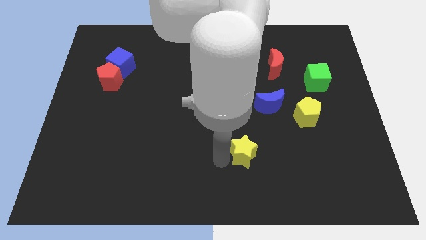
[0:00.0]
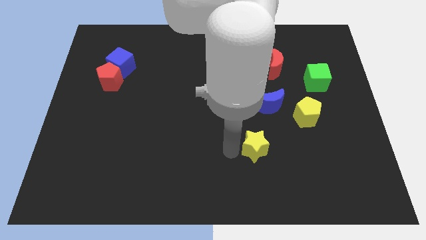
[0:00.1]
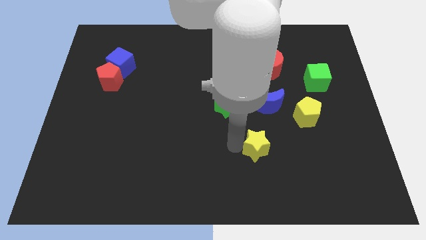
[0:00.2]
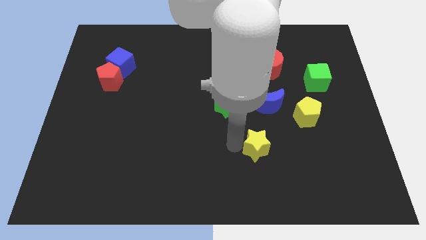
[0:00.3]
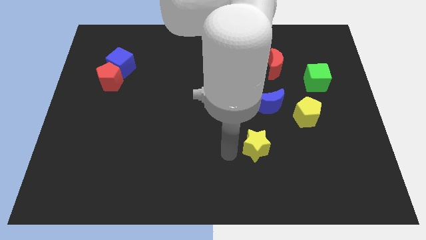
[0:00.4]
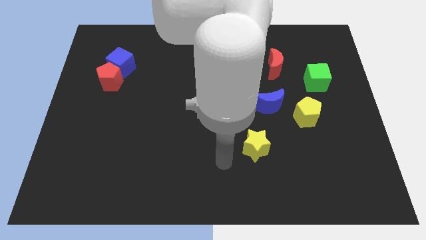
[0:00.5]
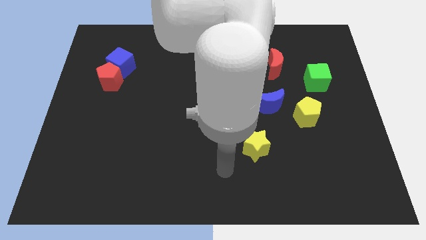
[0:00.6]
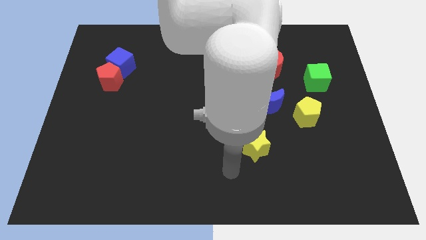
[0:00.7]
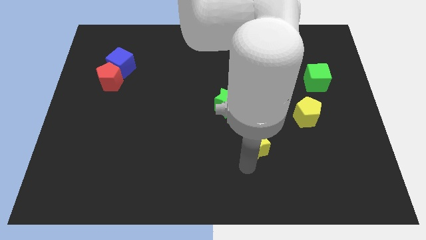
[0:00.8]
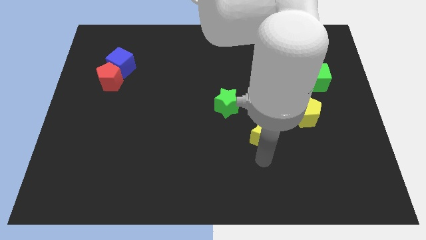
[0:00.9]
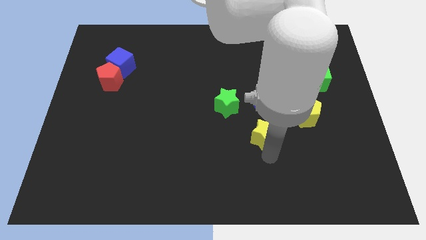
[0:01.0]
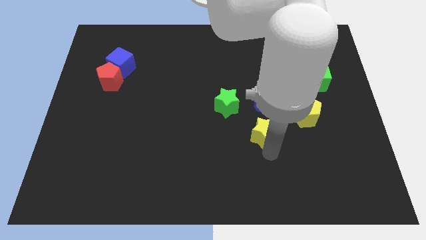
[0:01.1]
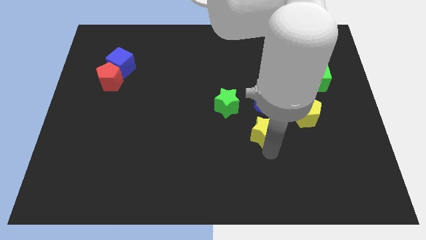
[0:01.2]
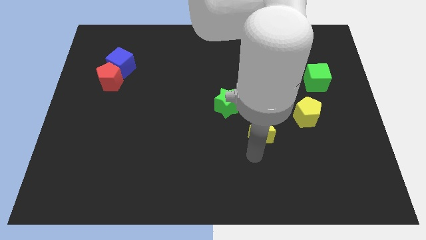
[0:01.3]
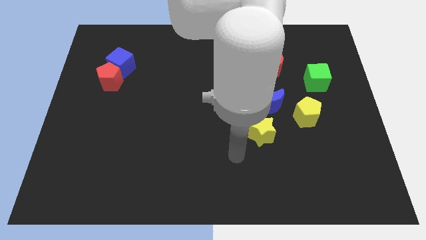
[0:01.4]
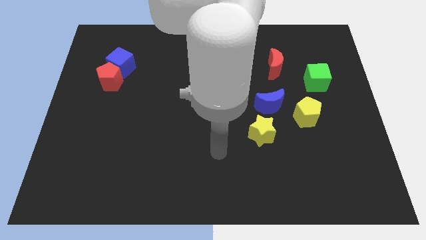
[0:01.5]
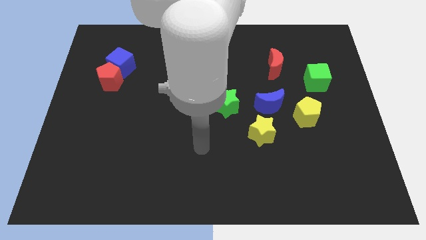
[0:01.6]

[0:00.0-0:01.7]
put the yellow star at the bottom side of the blue crescent

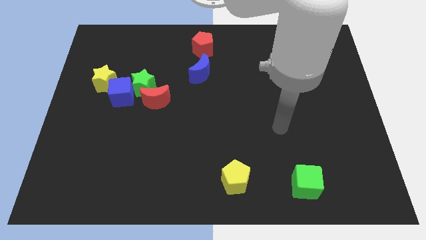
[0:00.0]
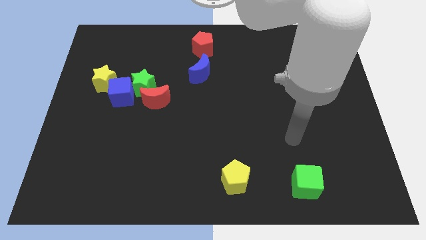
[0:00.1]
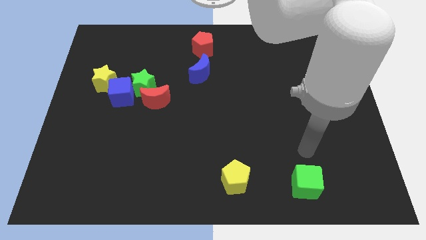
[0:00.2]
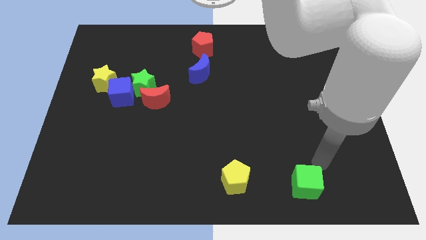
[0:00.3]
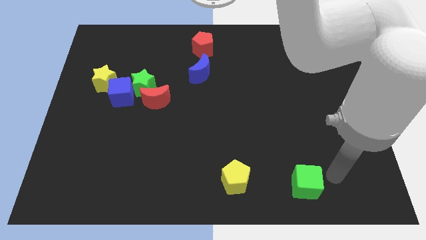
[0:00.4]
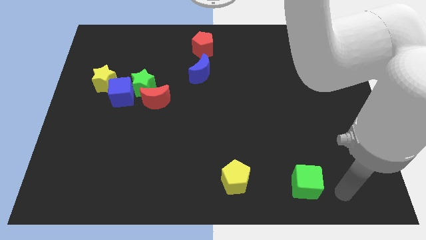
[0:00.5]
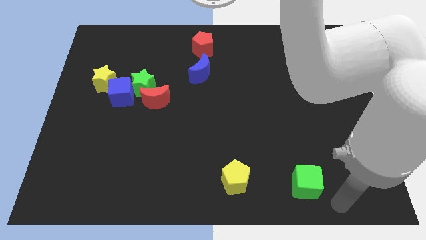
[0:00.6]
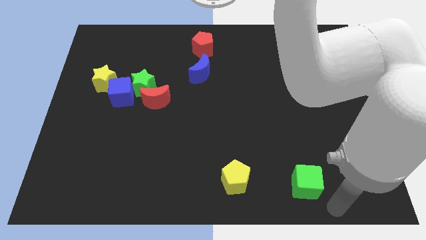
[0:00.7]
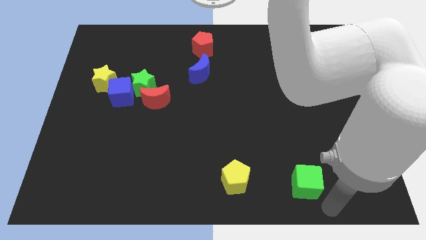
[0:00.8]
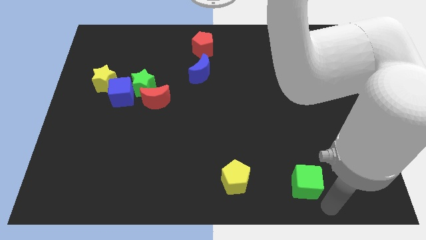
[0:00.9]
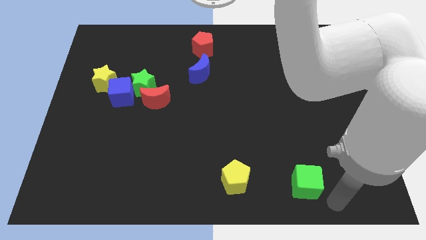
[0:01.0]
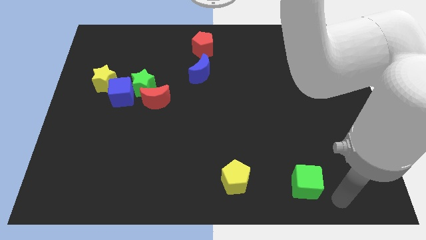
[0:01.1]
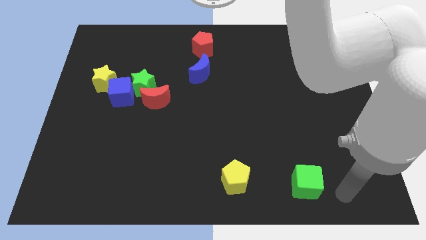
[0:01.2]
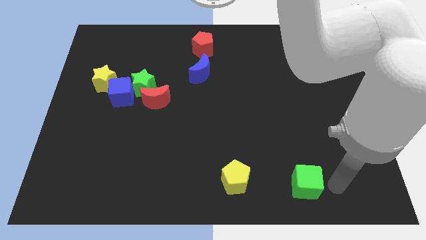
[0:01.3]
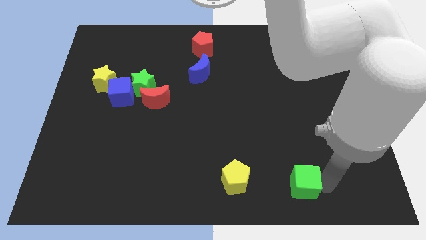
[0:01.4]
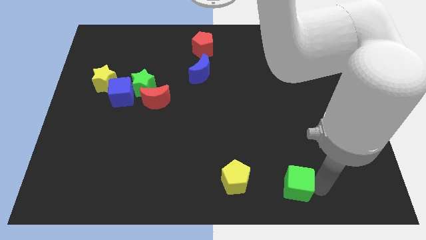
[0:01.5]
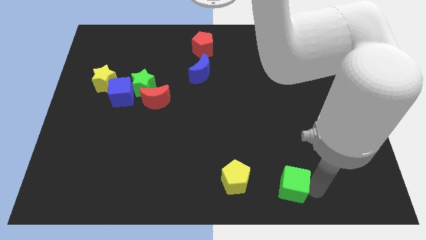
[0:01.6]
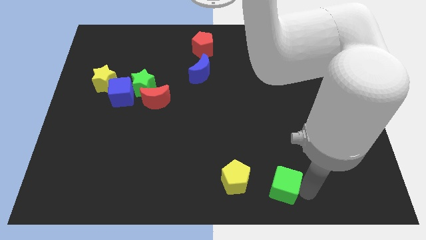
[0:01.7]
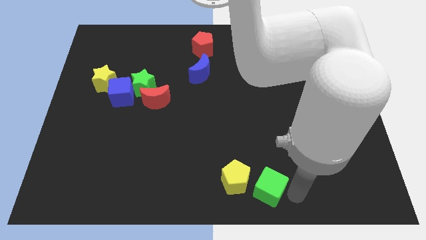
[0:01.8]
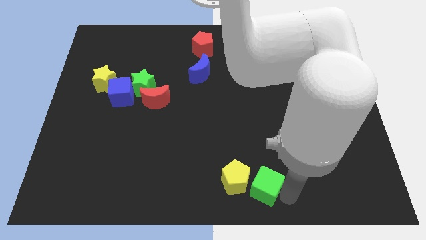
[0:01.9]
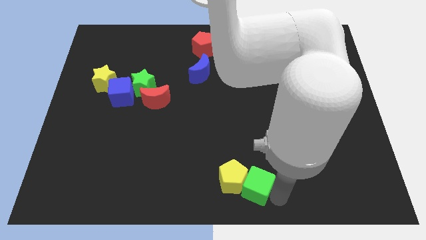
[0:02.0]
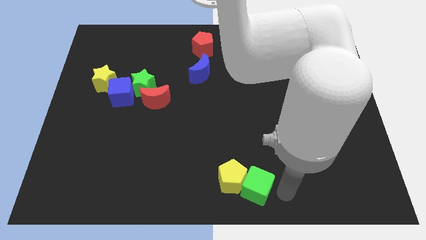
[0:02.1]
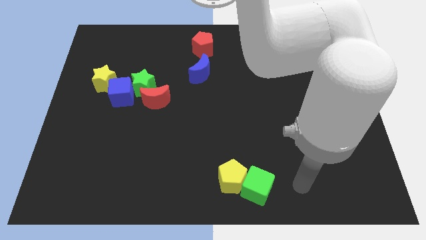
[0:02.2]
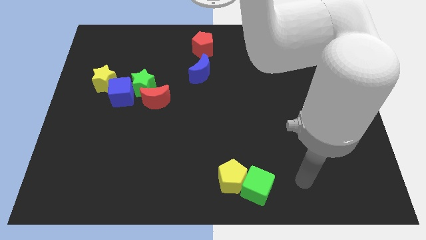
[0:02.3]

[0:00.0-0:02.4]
push the green cube into the yellow pentagon

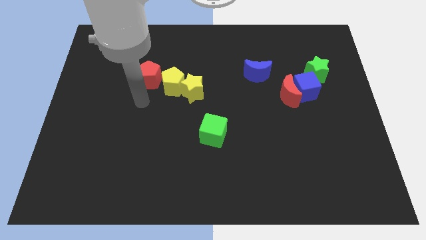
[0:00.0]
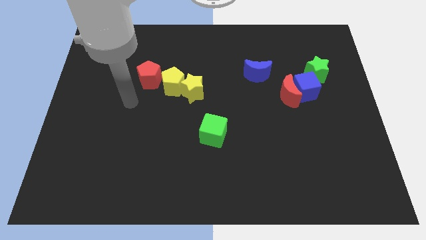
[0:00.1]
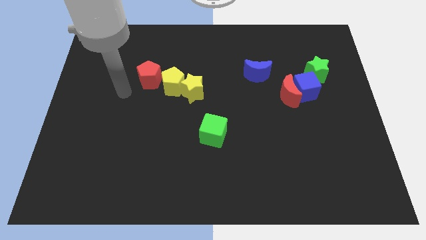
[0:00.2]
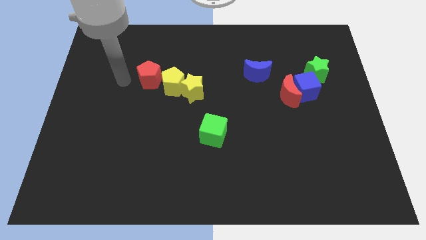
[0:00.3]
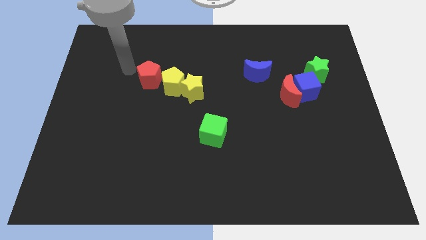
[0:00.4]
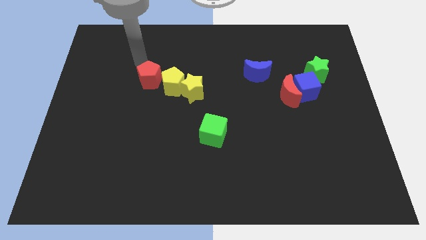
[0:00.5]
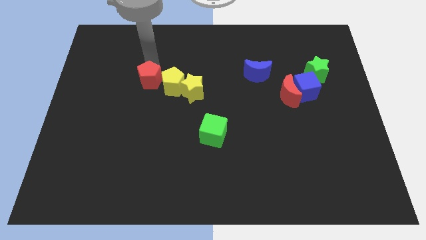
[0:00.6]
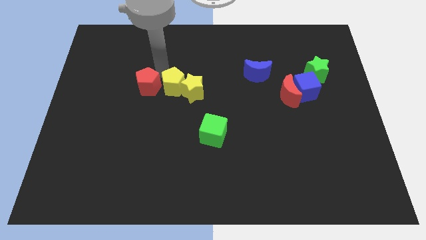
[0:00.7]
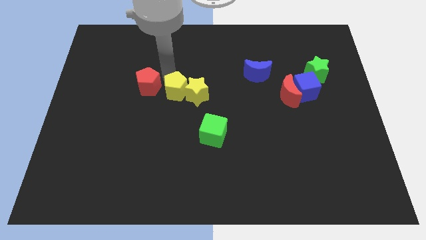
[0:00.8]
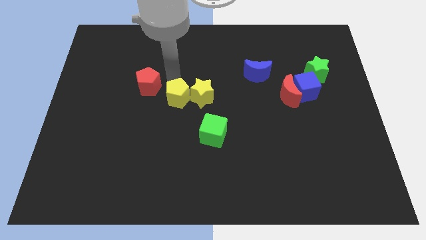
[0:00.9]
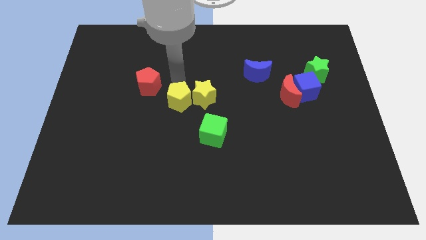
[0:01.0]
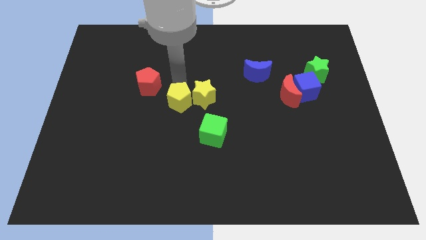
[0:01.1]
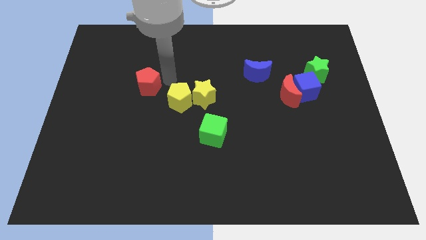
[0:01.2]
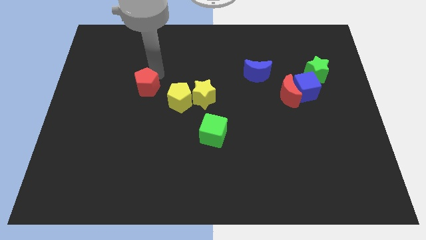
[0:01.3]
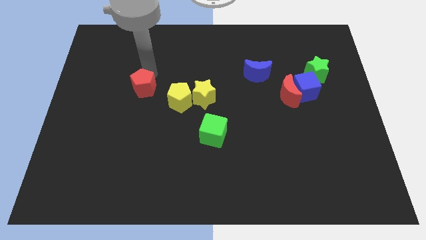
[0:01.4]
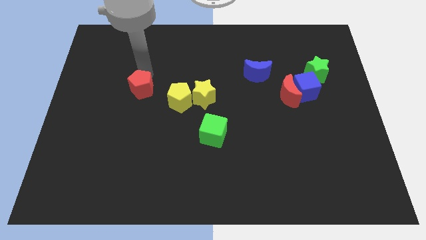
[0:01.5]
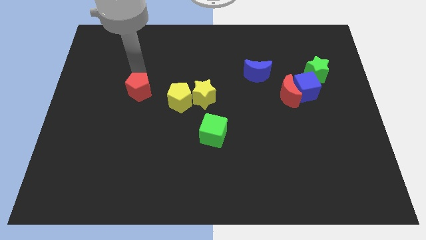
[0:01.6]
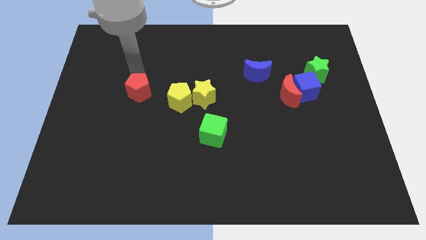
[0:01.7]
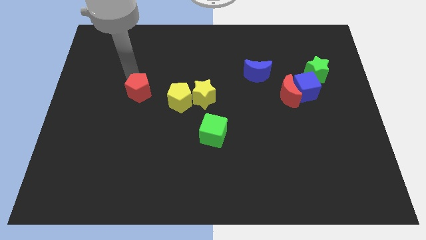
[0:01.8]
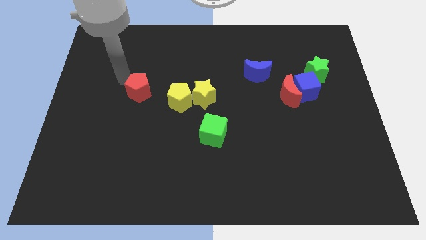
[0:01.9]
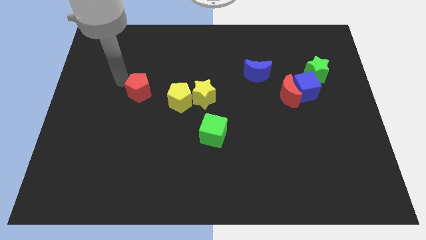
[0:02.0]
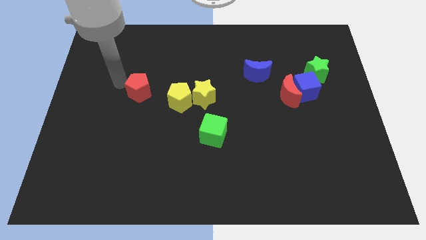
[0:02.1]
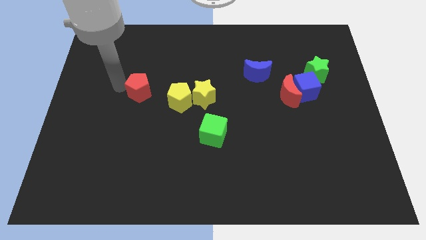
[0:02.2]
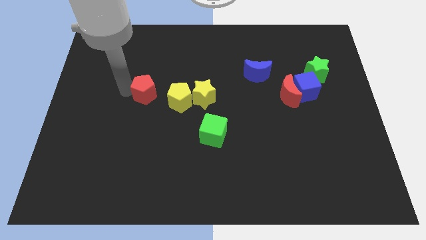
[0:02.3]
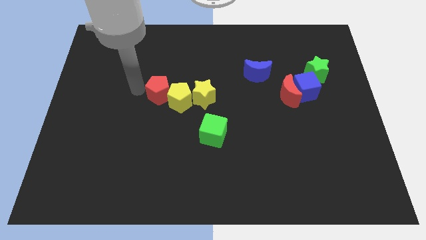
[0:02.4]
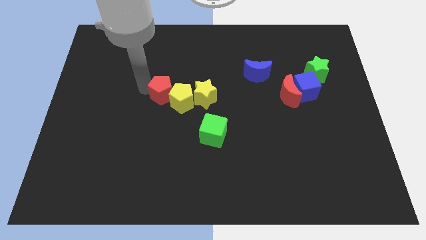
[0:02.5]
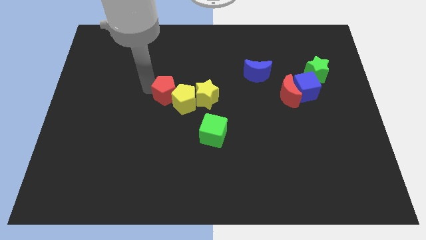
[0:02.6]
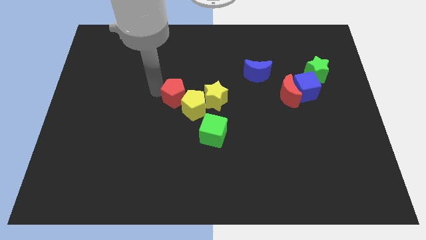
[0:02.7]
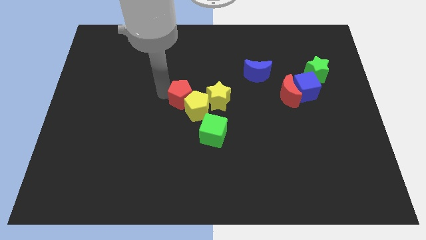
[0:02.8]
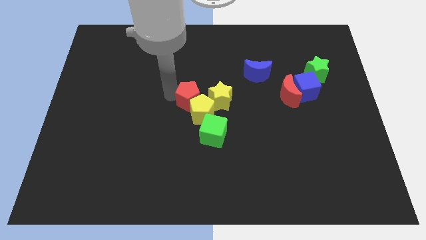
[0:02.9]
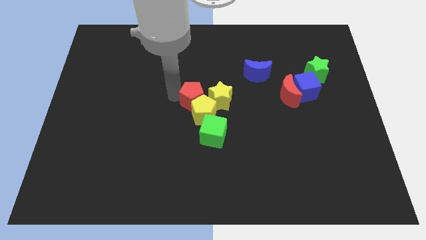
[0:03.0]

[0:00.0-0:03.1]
push the group of blocks to the center of the board

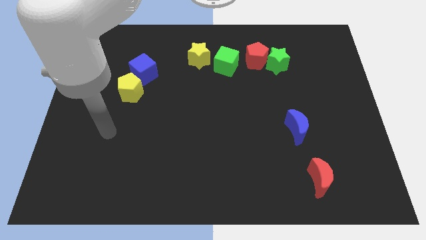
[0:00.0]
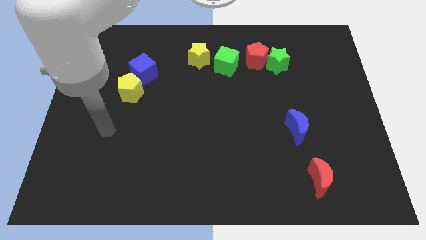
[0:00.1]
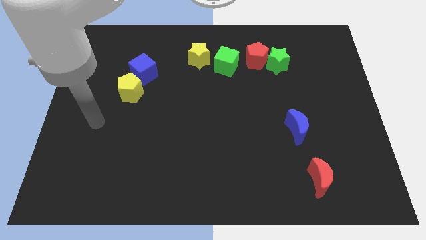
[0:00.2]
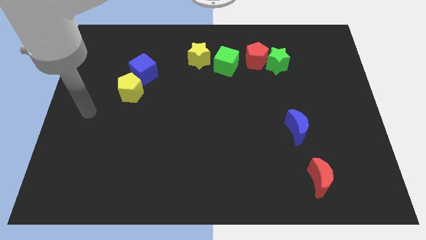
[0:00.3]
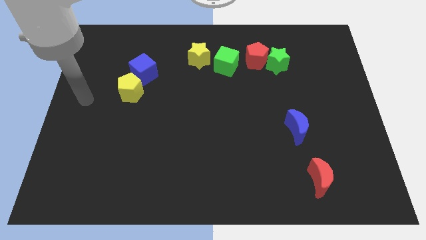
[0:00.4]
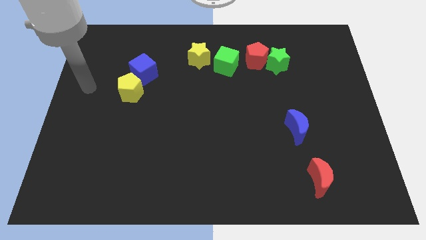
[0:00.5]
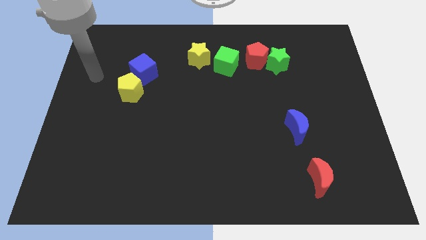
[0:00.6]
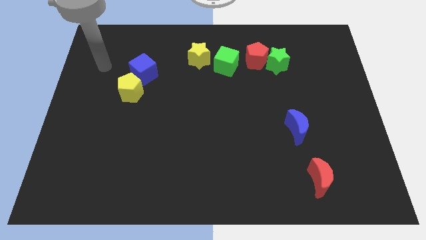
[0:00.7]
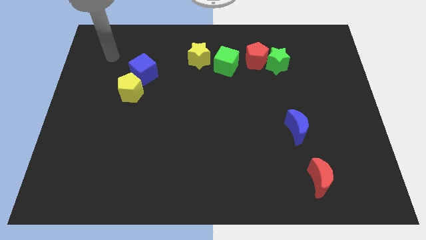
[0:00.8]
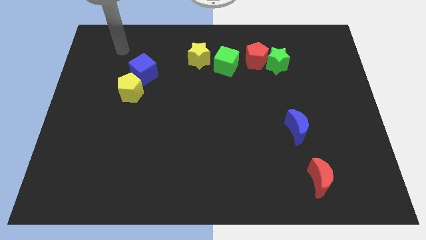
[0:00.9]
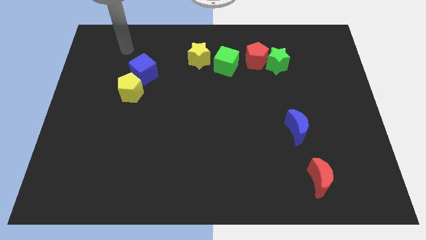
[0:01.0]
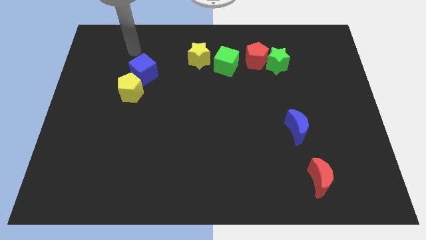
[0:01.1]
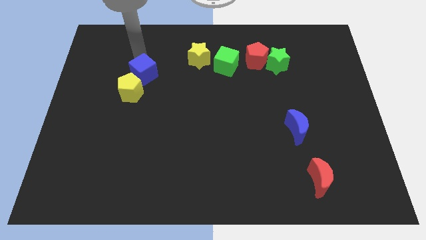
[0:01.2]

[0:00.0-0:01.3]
move your arm up and to the right

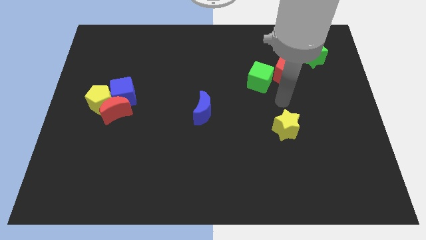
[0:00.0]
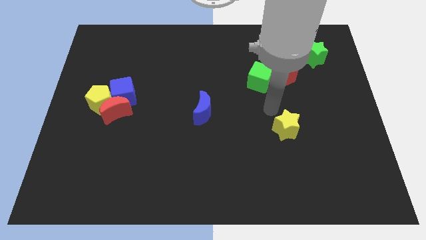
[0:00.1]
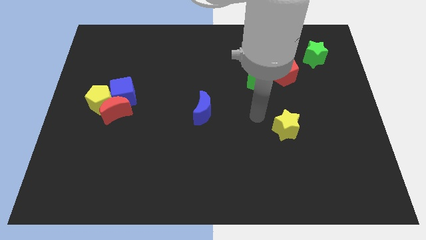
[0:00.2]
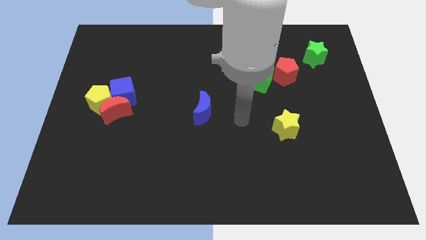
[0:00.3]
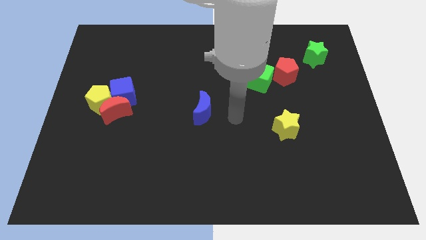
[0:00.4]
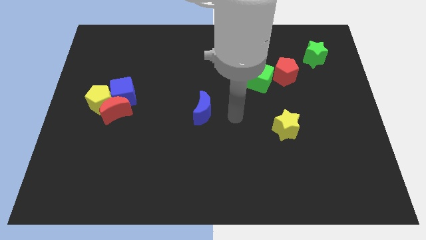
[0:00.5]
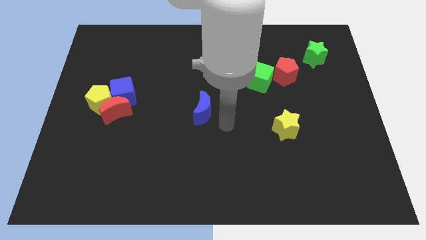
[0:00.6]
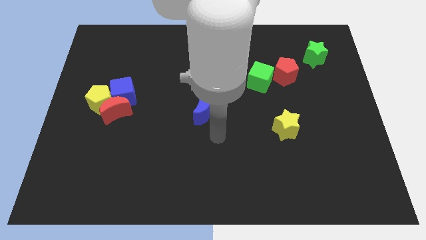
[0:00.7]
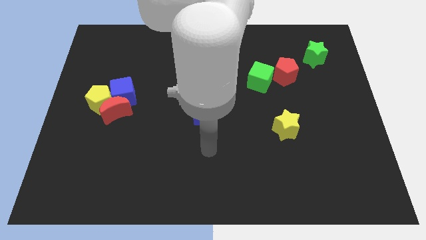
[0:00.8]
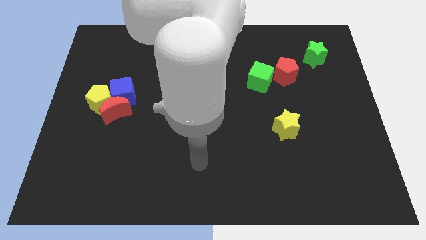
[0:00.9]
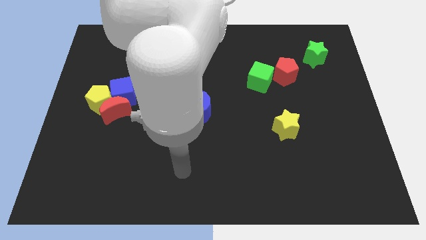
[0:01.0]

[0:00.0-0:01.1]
point your arm below the blue crescent
